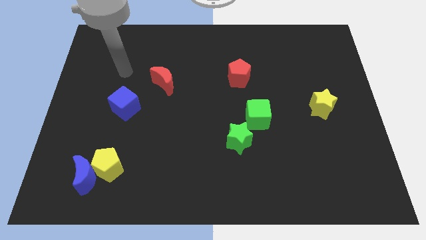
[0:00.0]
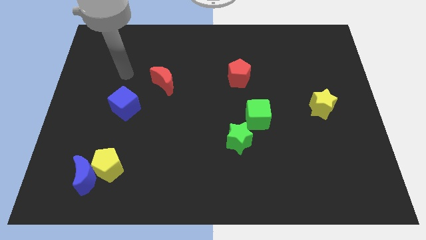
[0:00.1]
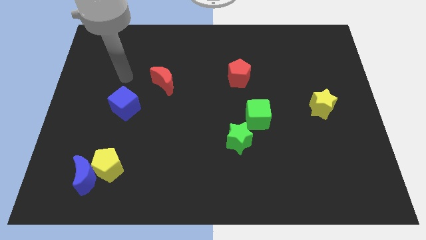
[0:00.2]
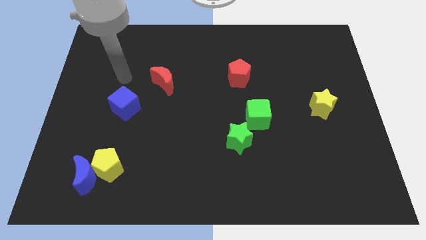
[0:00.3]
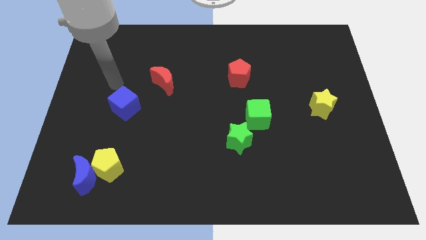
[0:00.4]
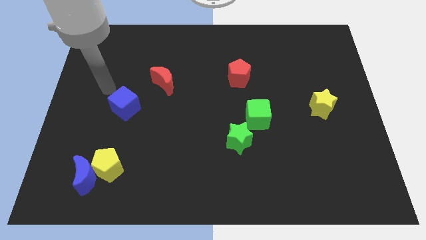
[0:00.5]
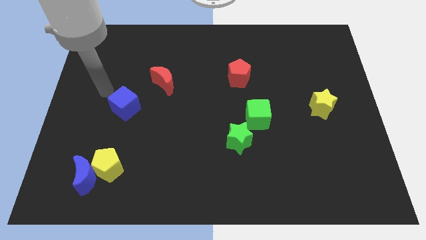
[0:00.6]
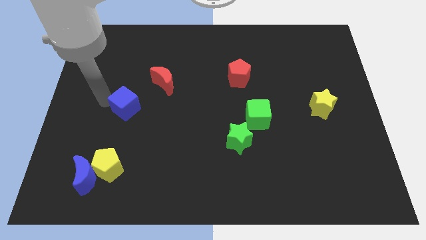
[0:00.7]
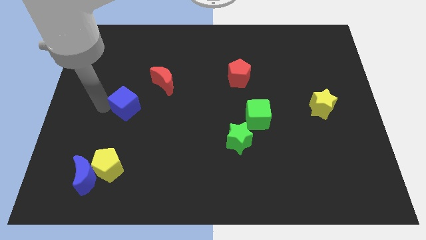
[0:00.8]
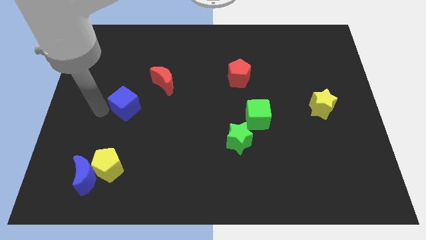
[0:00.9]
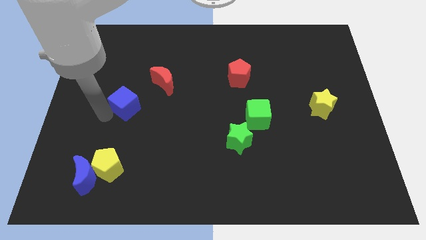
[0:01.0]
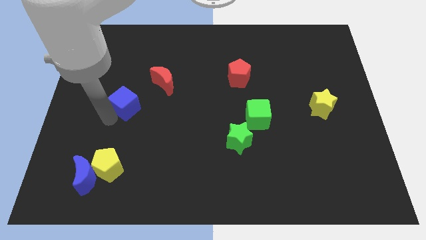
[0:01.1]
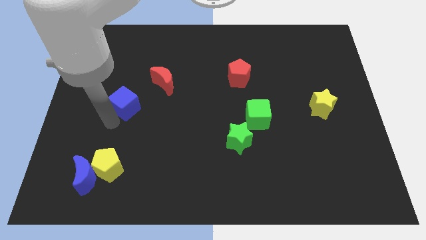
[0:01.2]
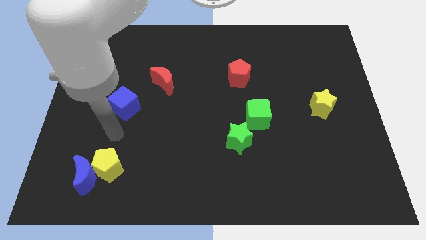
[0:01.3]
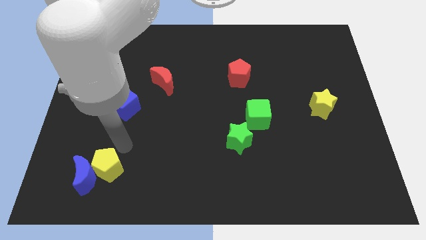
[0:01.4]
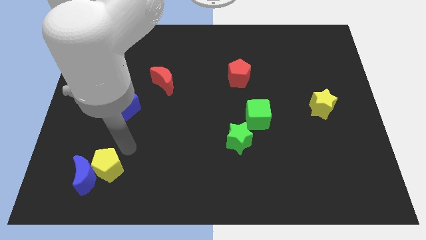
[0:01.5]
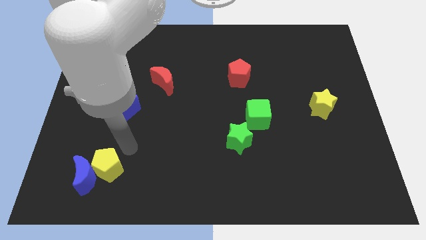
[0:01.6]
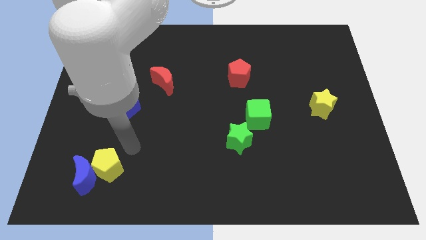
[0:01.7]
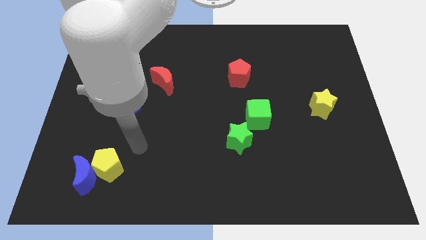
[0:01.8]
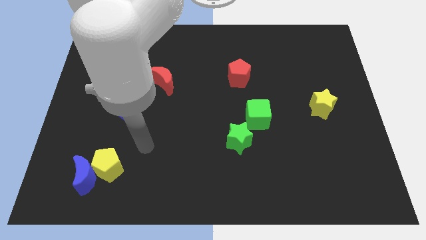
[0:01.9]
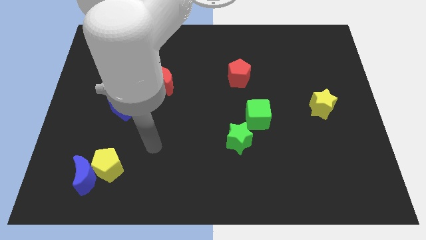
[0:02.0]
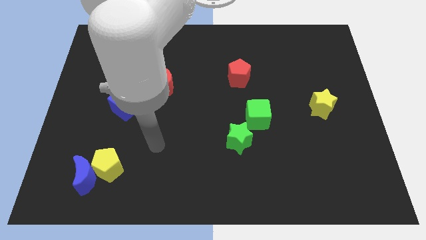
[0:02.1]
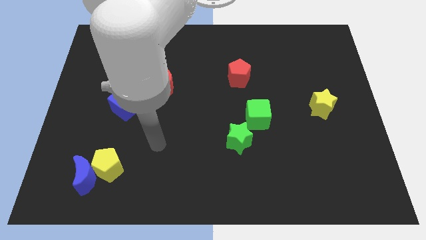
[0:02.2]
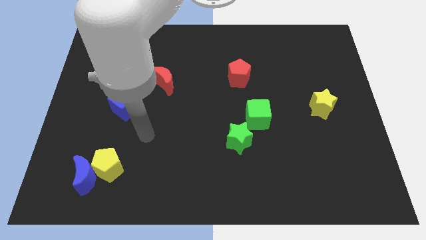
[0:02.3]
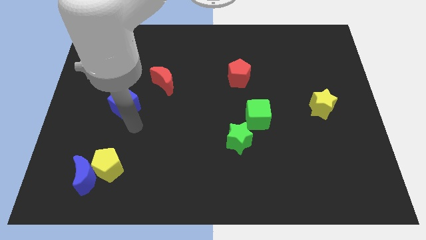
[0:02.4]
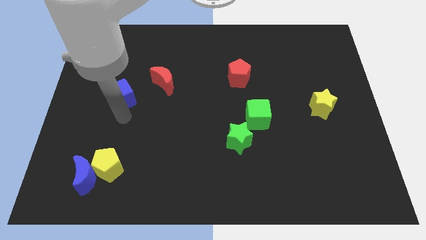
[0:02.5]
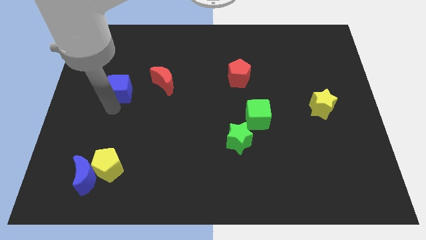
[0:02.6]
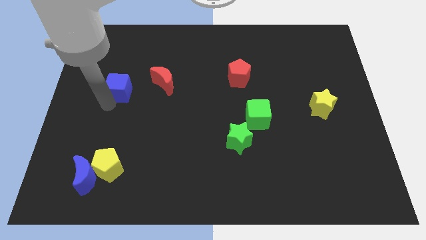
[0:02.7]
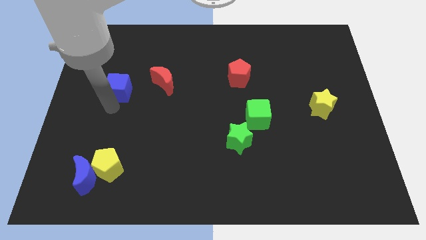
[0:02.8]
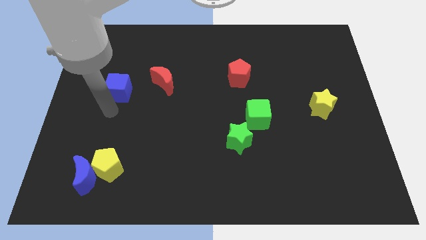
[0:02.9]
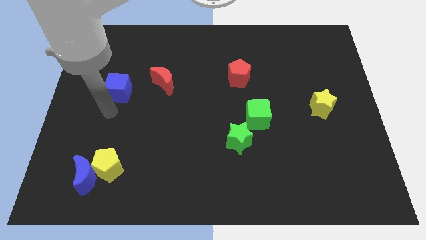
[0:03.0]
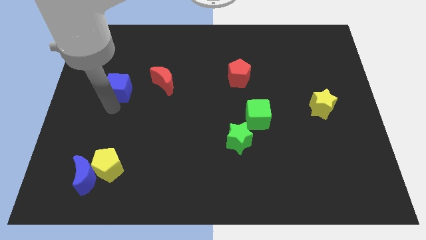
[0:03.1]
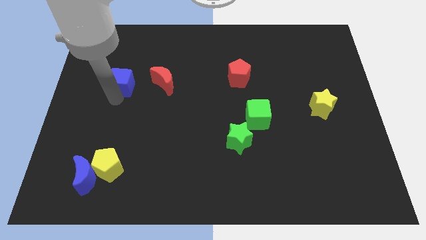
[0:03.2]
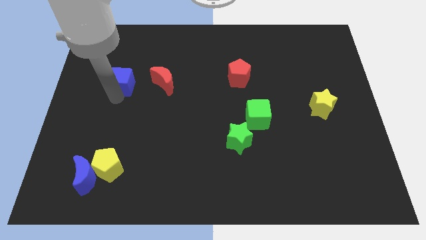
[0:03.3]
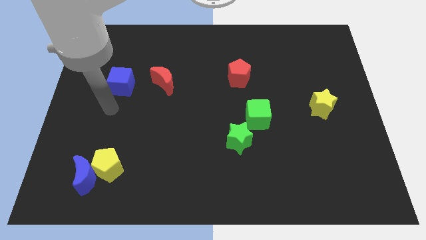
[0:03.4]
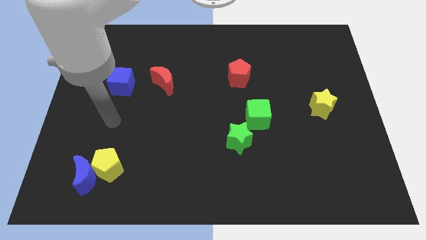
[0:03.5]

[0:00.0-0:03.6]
push the blue cube to the left of the red crescent

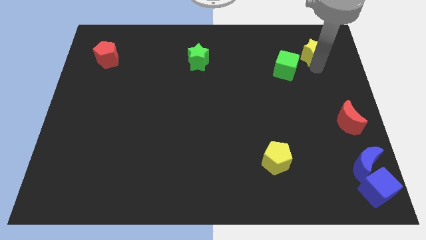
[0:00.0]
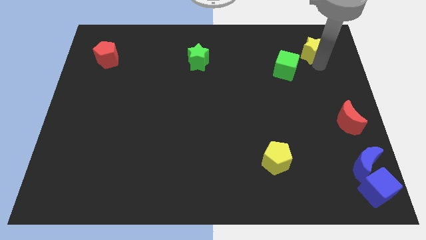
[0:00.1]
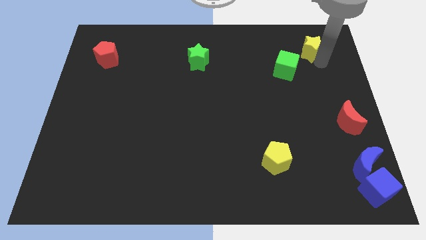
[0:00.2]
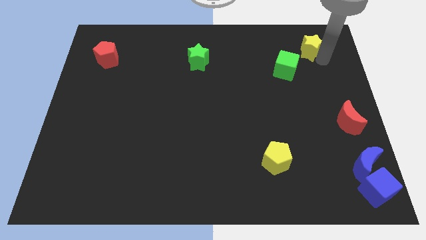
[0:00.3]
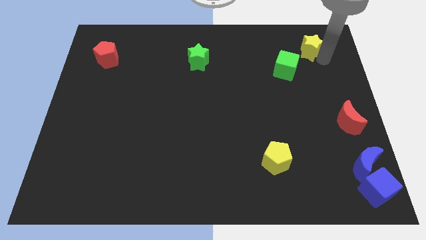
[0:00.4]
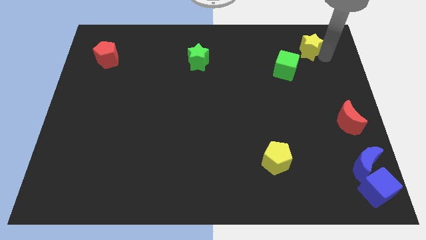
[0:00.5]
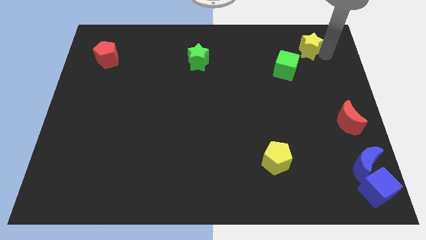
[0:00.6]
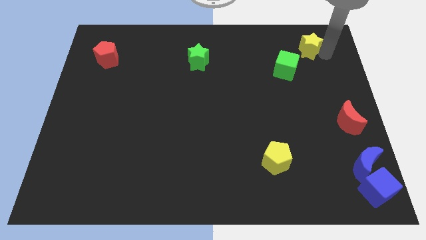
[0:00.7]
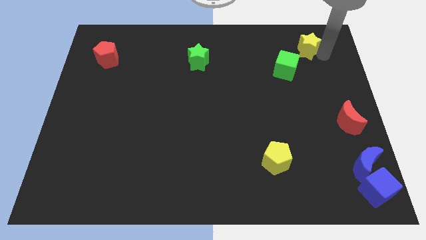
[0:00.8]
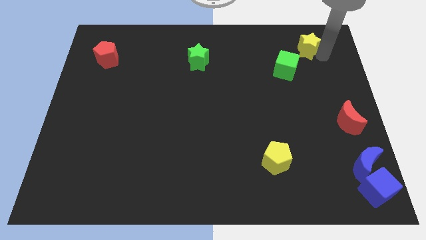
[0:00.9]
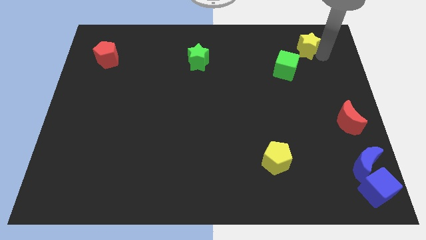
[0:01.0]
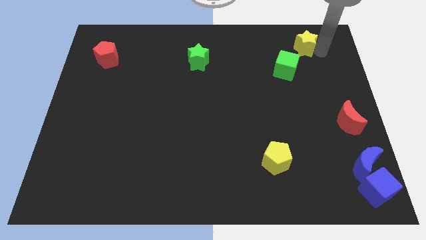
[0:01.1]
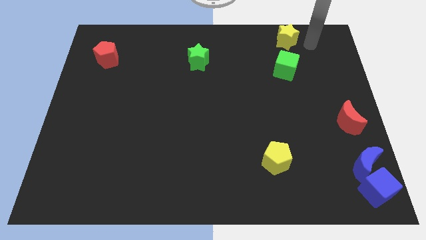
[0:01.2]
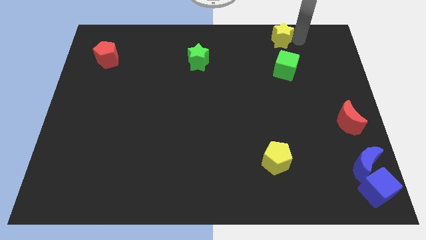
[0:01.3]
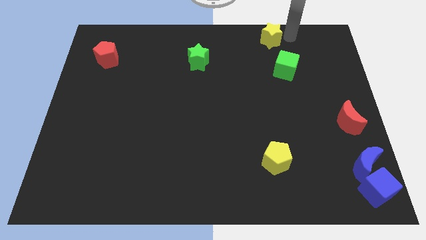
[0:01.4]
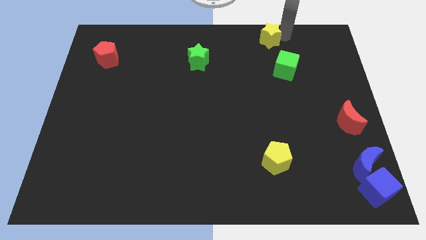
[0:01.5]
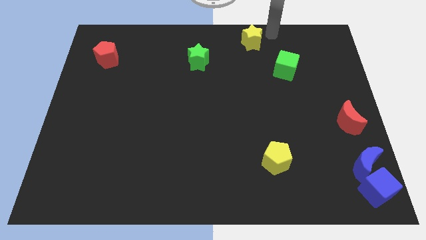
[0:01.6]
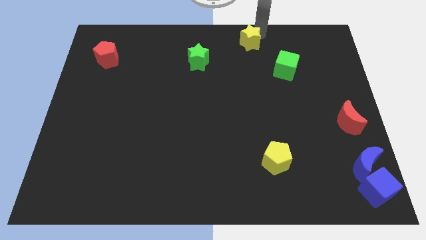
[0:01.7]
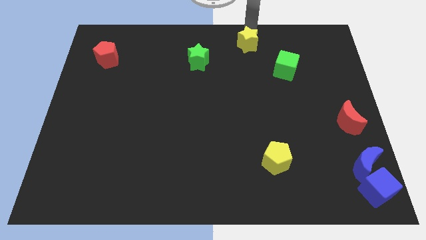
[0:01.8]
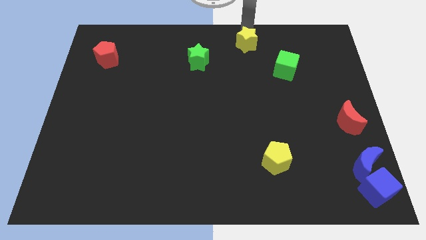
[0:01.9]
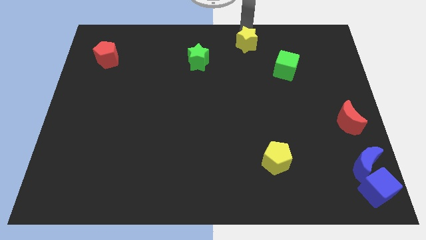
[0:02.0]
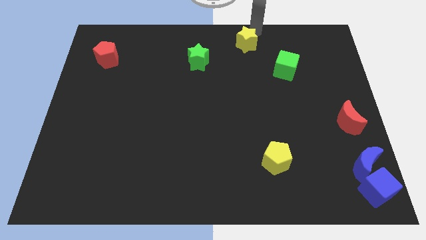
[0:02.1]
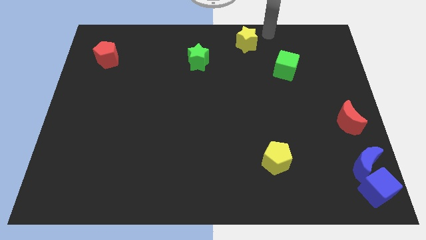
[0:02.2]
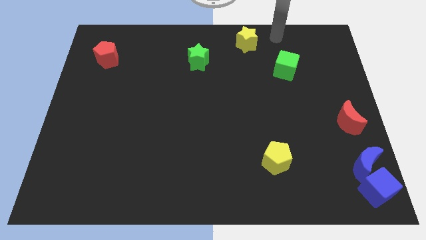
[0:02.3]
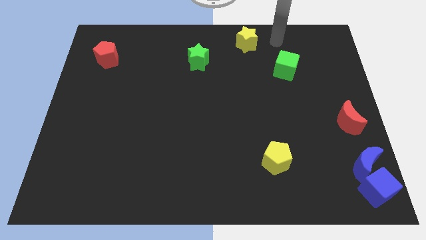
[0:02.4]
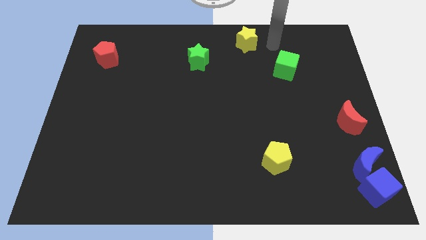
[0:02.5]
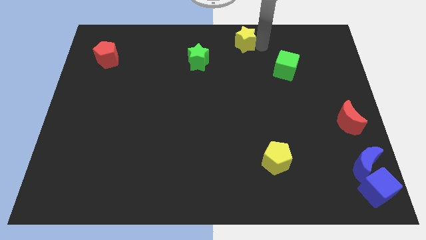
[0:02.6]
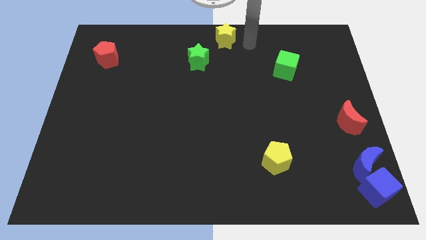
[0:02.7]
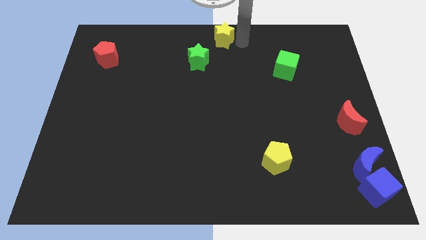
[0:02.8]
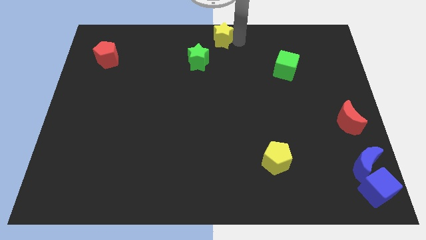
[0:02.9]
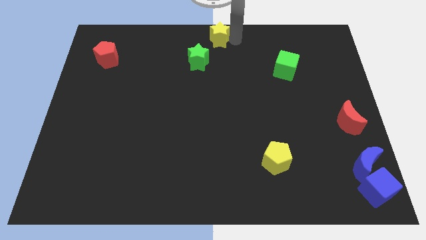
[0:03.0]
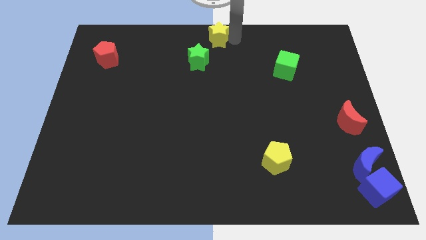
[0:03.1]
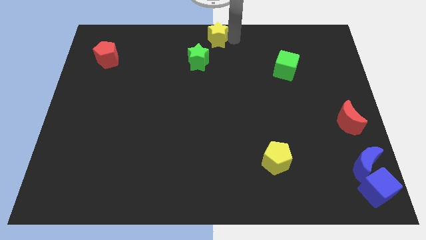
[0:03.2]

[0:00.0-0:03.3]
place yellow star slightly near to green star

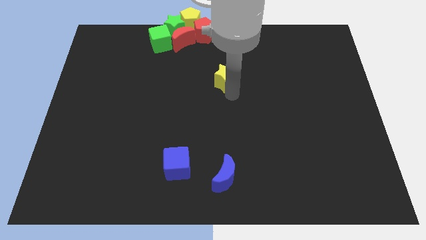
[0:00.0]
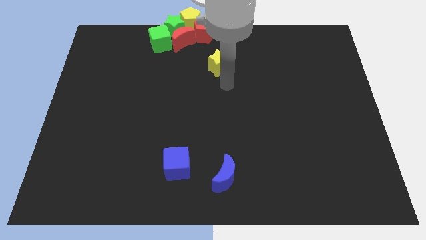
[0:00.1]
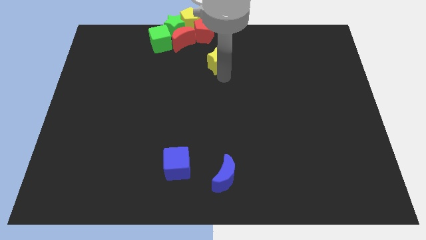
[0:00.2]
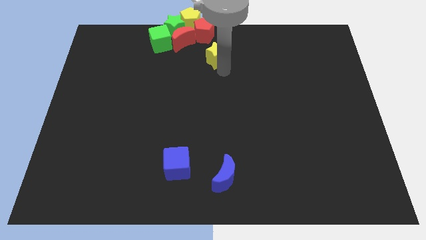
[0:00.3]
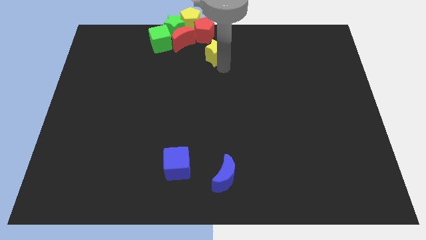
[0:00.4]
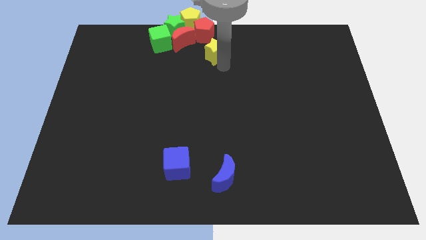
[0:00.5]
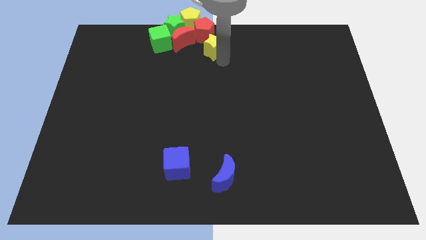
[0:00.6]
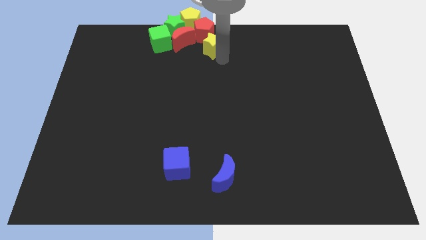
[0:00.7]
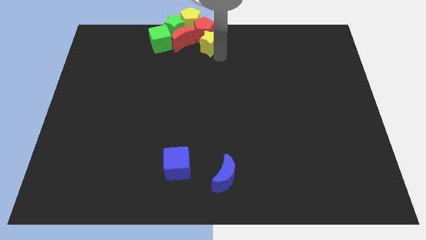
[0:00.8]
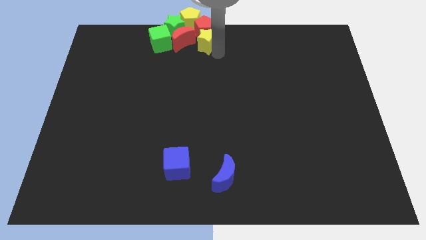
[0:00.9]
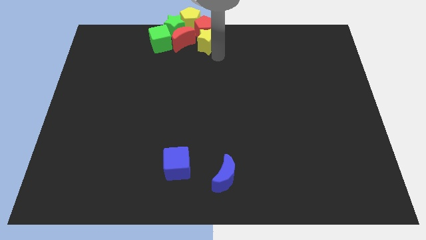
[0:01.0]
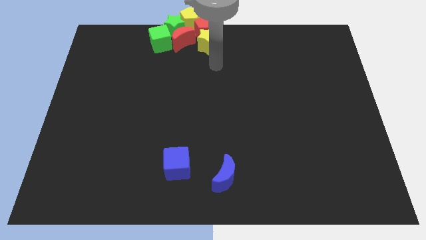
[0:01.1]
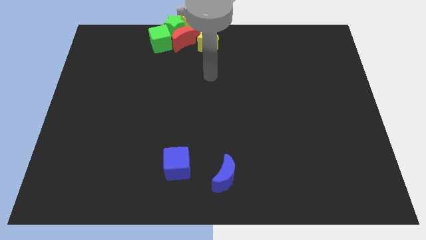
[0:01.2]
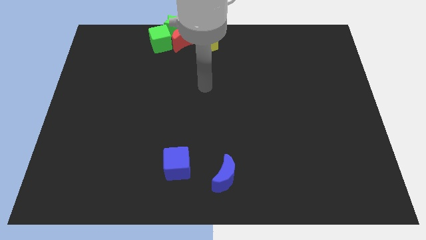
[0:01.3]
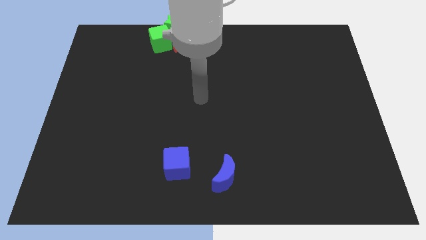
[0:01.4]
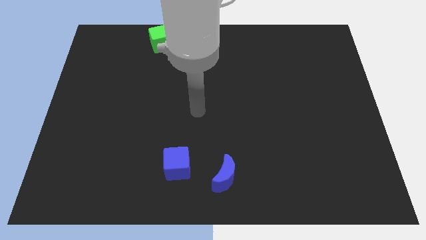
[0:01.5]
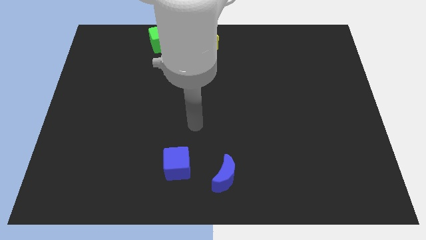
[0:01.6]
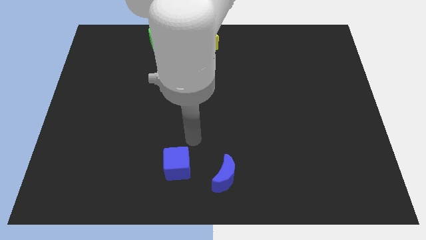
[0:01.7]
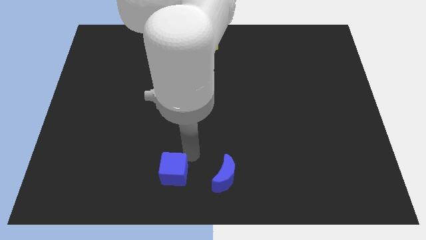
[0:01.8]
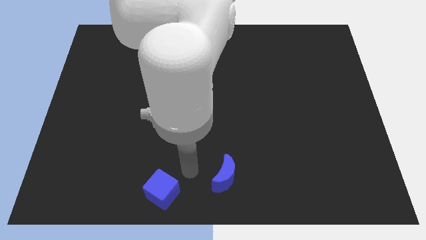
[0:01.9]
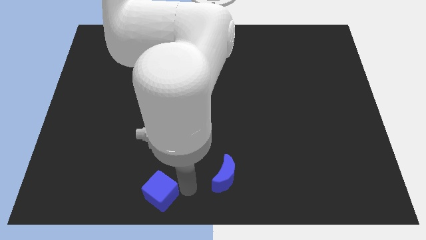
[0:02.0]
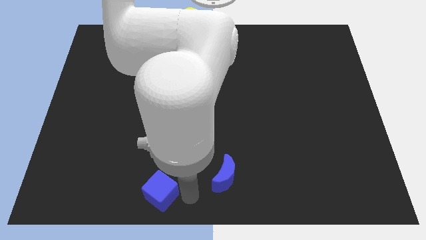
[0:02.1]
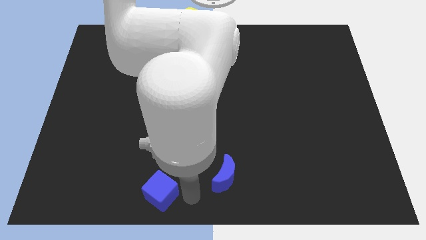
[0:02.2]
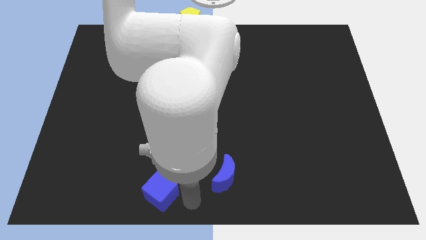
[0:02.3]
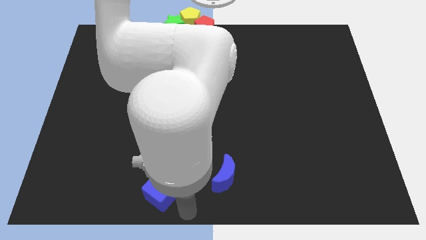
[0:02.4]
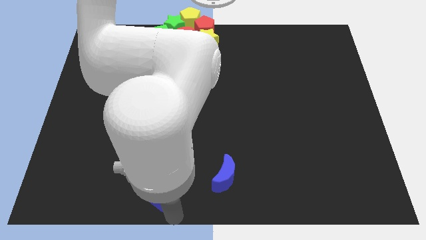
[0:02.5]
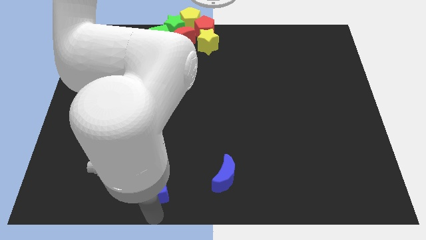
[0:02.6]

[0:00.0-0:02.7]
slightly touch right to the blue cube
